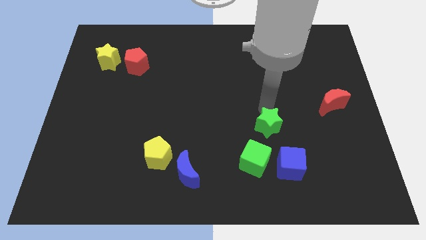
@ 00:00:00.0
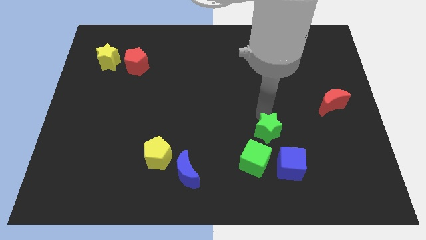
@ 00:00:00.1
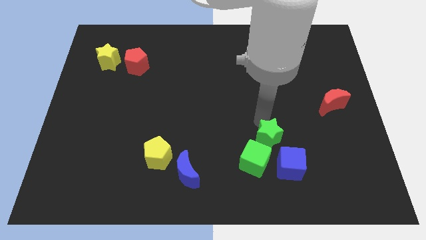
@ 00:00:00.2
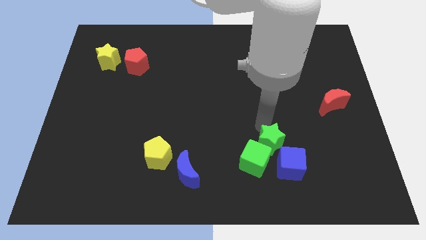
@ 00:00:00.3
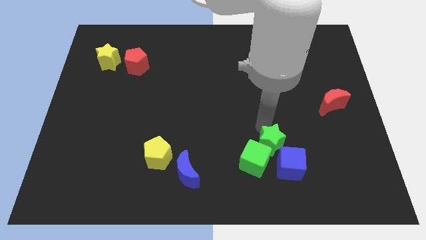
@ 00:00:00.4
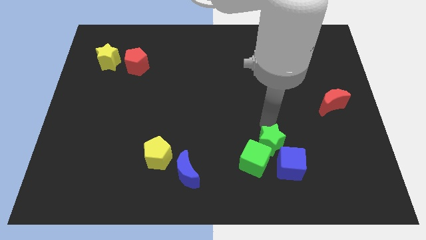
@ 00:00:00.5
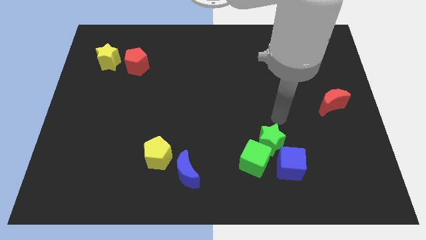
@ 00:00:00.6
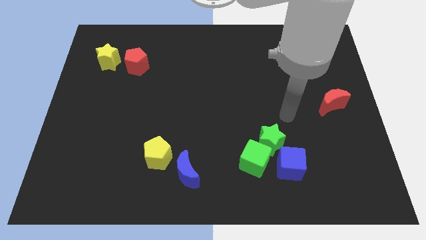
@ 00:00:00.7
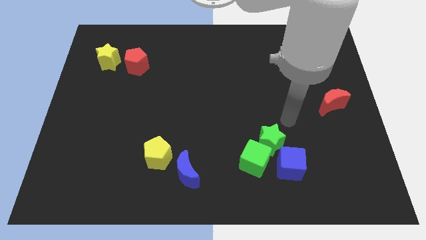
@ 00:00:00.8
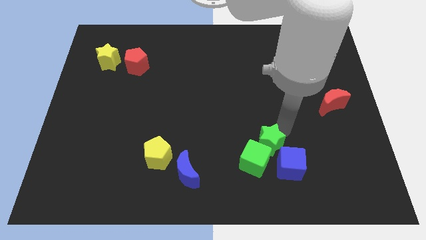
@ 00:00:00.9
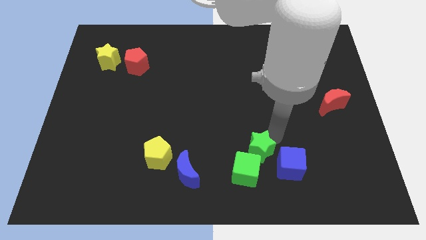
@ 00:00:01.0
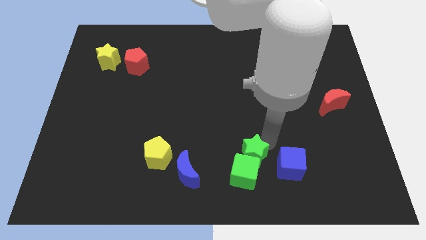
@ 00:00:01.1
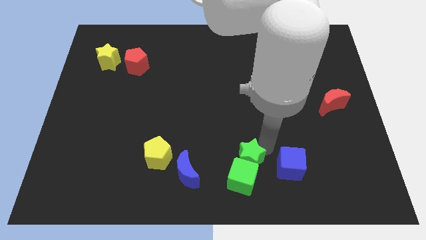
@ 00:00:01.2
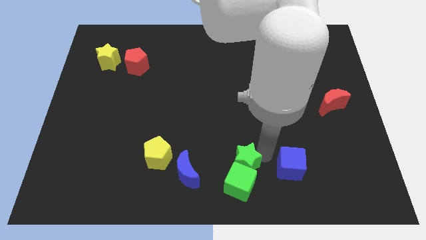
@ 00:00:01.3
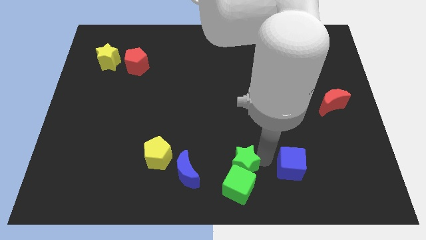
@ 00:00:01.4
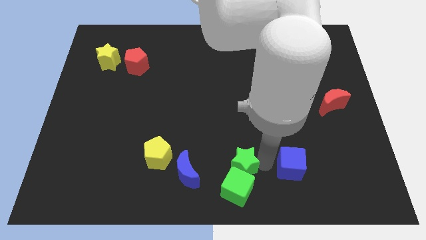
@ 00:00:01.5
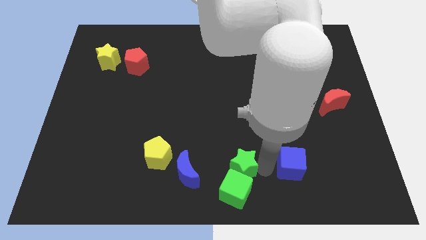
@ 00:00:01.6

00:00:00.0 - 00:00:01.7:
push the green star into the green cube

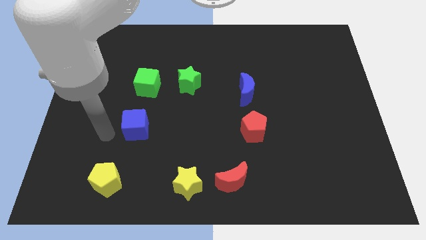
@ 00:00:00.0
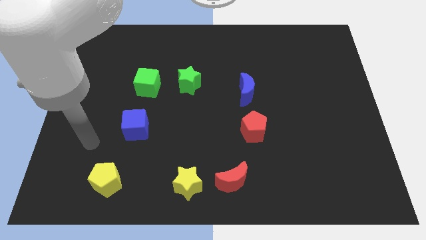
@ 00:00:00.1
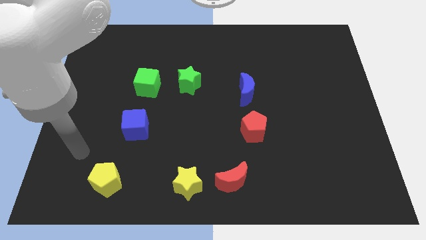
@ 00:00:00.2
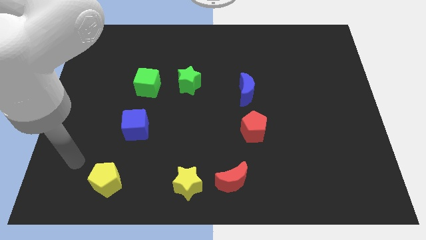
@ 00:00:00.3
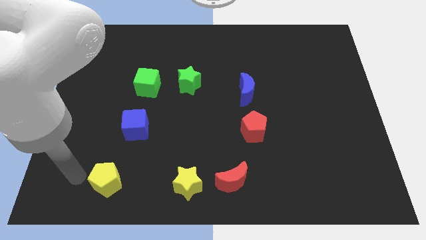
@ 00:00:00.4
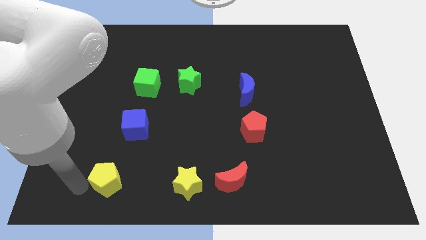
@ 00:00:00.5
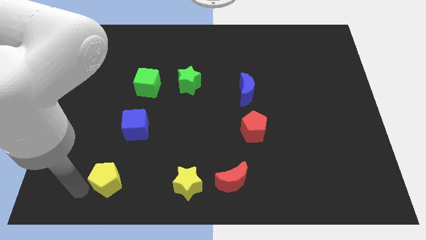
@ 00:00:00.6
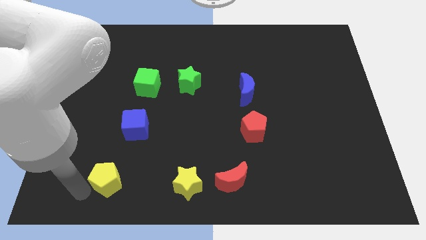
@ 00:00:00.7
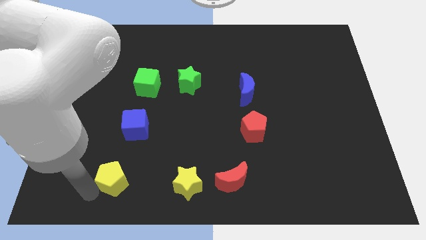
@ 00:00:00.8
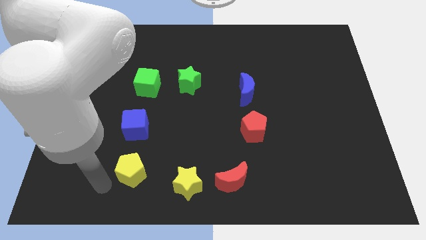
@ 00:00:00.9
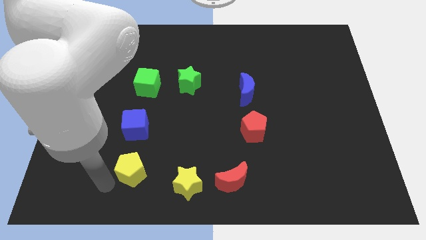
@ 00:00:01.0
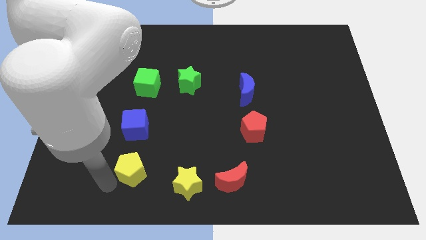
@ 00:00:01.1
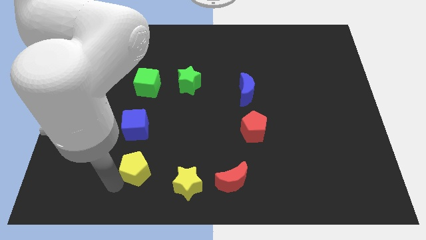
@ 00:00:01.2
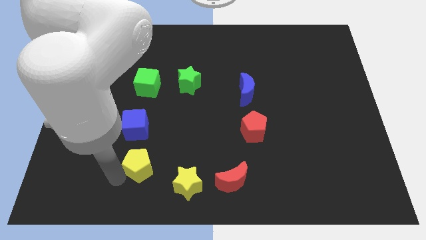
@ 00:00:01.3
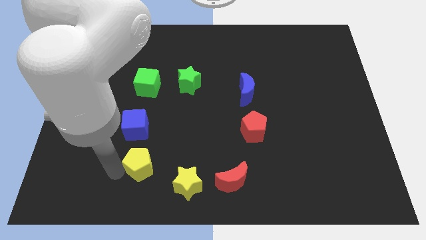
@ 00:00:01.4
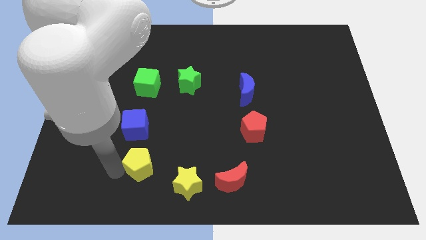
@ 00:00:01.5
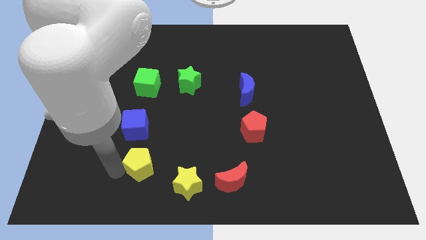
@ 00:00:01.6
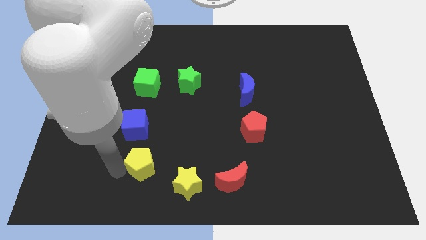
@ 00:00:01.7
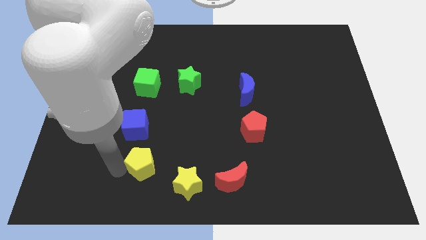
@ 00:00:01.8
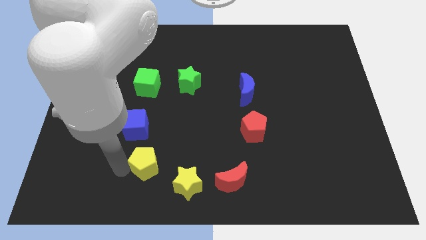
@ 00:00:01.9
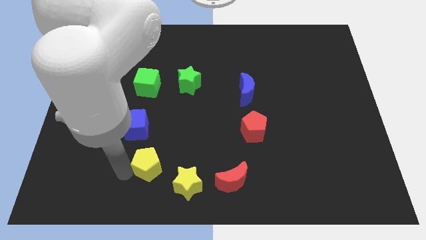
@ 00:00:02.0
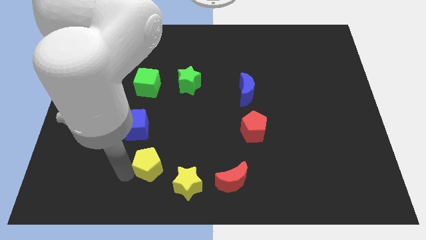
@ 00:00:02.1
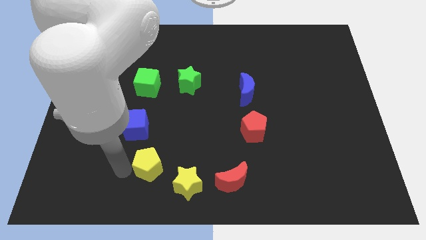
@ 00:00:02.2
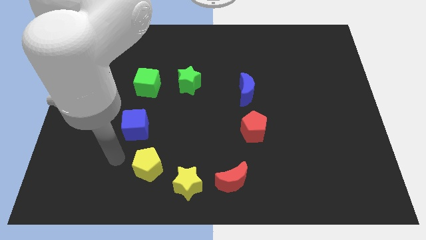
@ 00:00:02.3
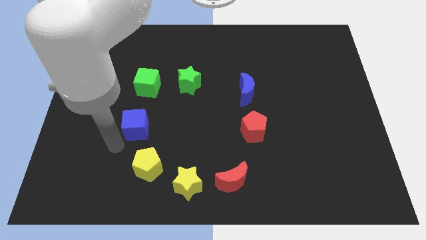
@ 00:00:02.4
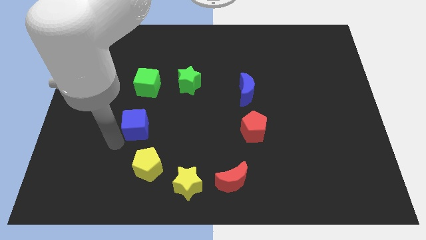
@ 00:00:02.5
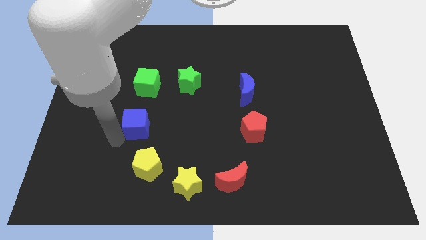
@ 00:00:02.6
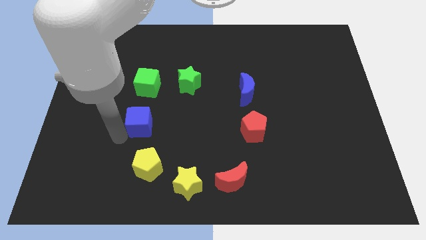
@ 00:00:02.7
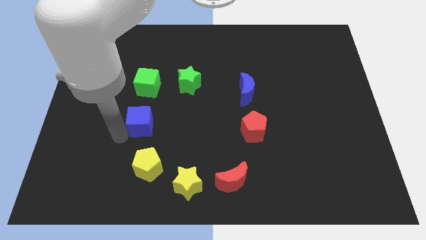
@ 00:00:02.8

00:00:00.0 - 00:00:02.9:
place yellow star to the bottom right of blue cube

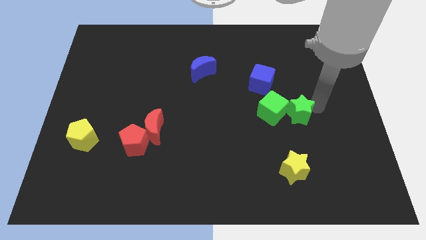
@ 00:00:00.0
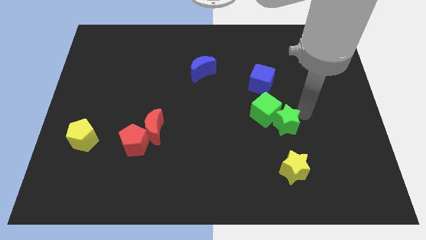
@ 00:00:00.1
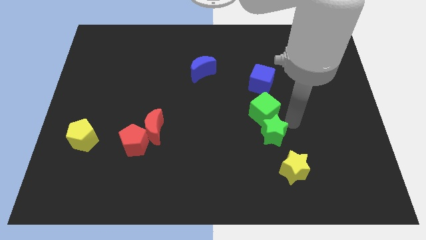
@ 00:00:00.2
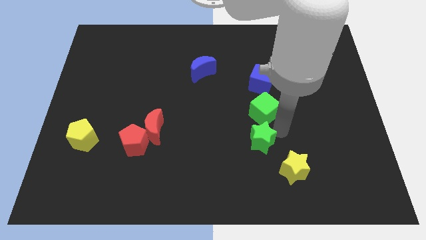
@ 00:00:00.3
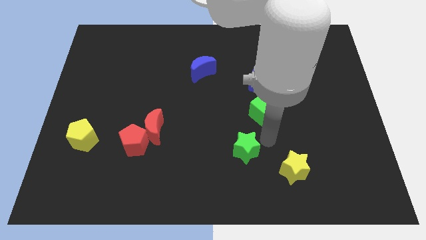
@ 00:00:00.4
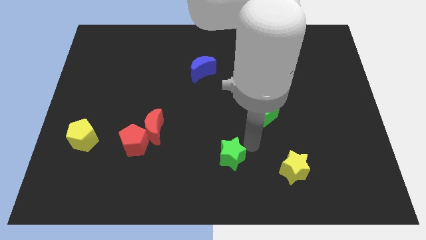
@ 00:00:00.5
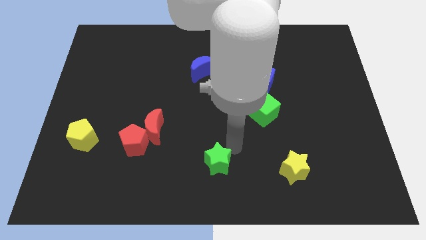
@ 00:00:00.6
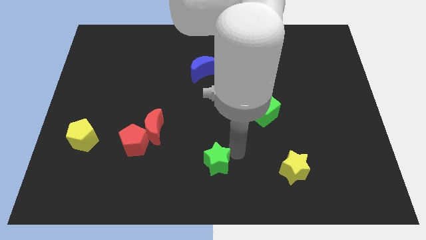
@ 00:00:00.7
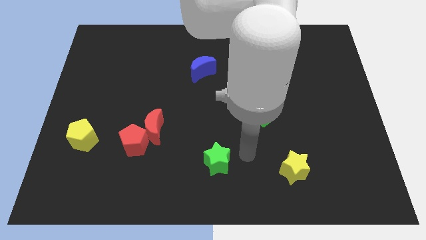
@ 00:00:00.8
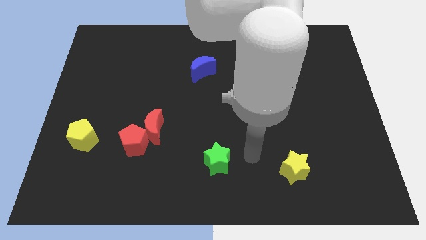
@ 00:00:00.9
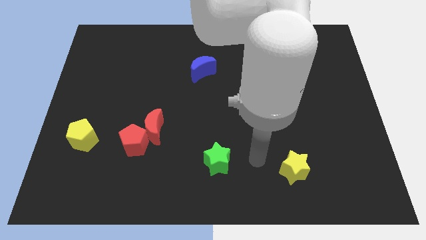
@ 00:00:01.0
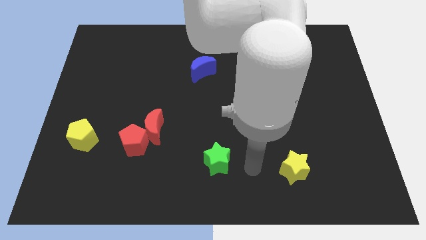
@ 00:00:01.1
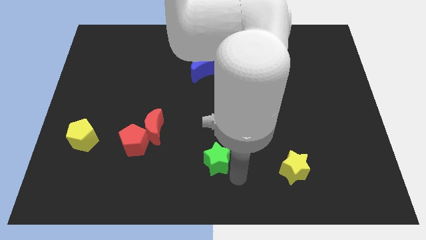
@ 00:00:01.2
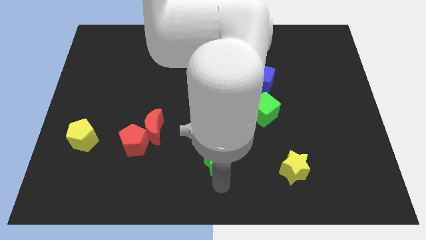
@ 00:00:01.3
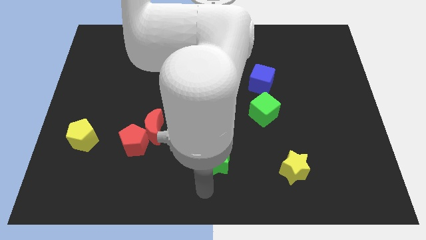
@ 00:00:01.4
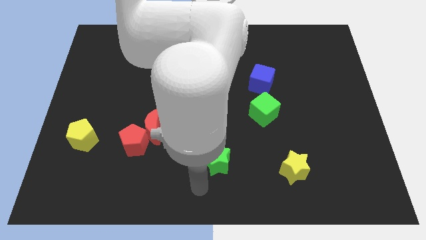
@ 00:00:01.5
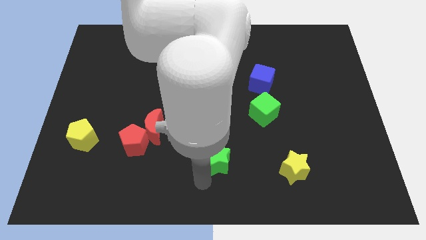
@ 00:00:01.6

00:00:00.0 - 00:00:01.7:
push the green star towards the bottom centre of the board

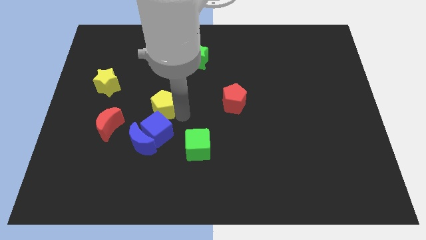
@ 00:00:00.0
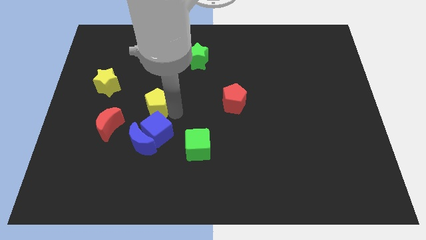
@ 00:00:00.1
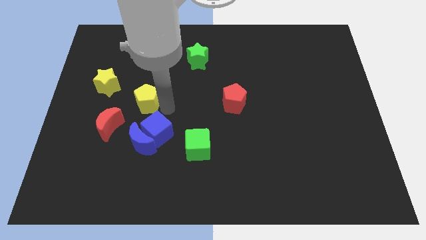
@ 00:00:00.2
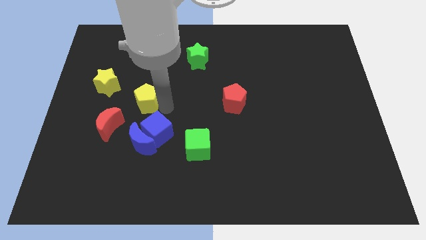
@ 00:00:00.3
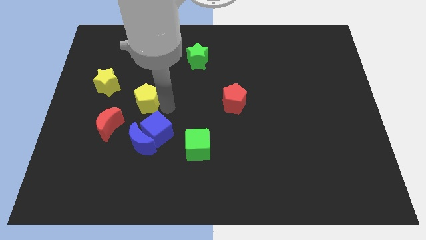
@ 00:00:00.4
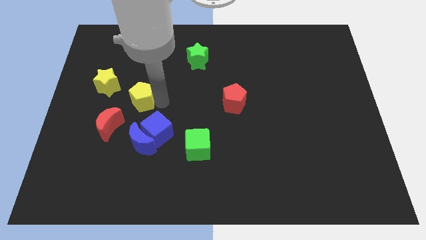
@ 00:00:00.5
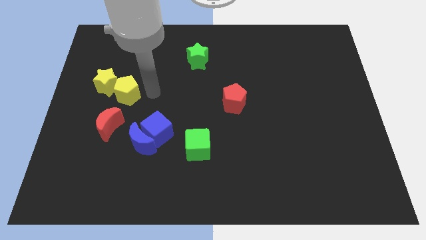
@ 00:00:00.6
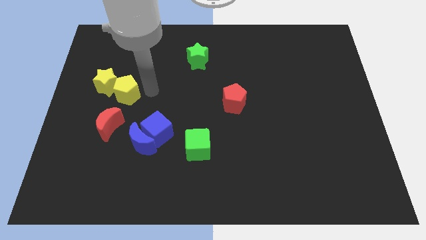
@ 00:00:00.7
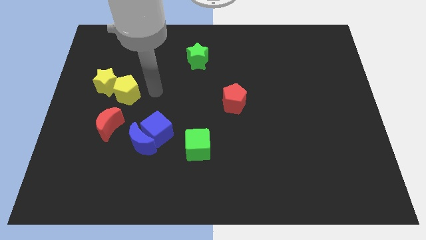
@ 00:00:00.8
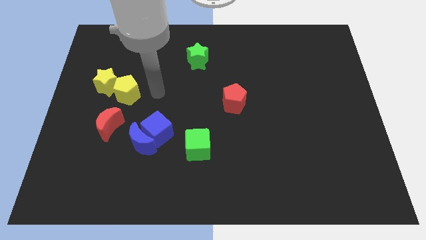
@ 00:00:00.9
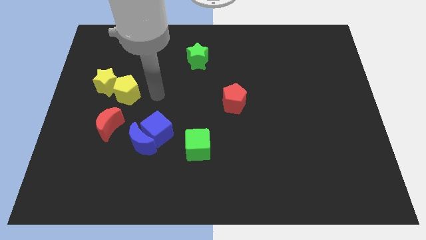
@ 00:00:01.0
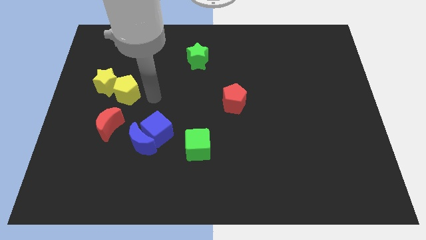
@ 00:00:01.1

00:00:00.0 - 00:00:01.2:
push the yellow pentagon towards the right side of the yellow star

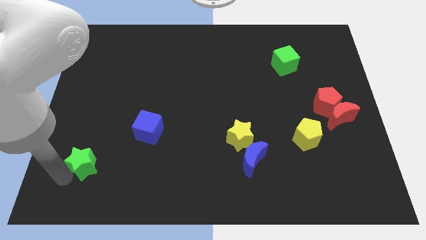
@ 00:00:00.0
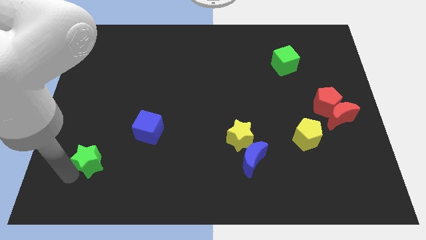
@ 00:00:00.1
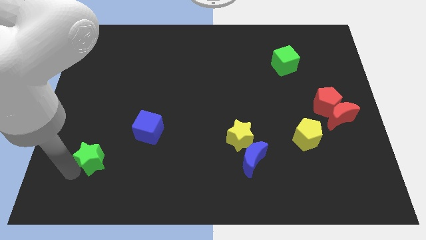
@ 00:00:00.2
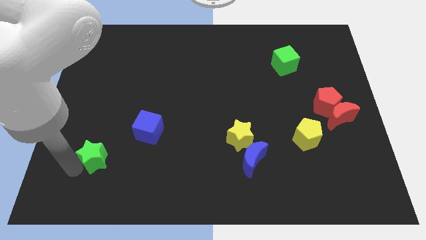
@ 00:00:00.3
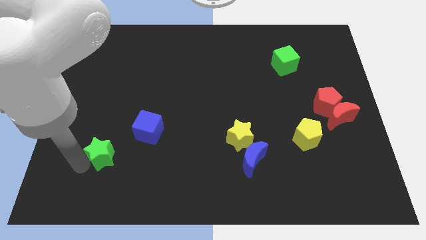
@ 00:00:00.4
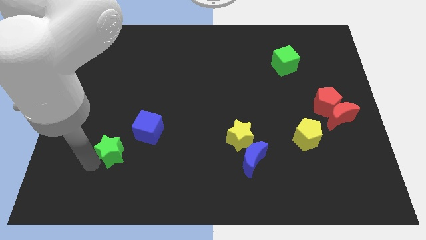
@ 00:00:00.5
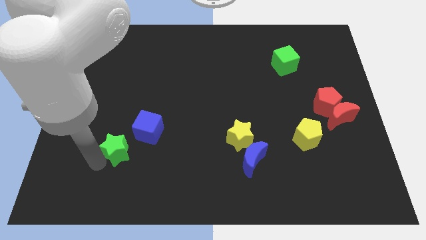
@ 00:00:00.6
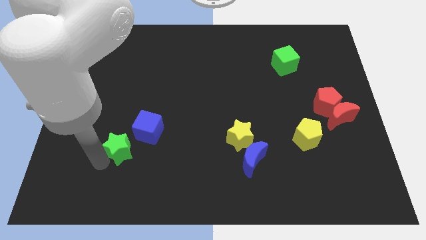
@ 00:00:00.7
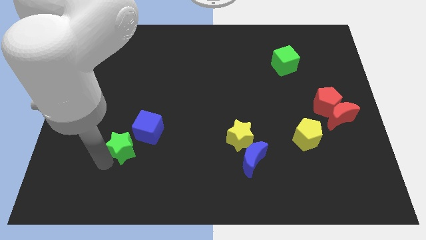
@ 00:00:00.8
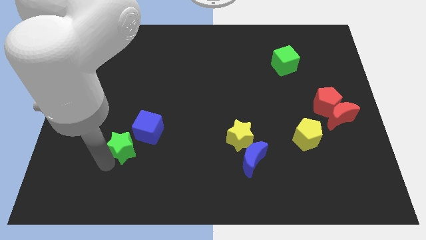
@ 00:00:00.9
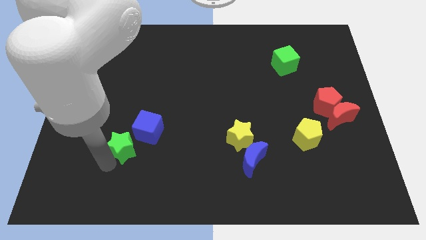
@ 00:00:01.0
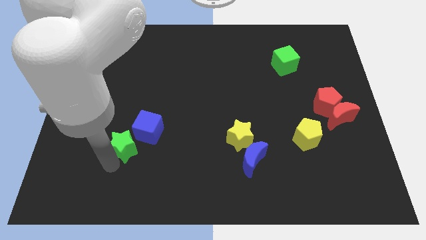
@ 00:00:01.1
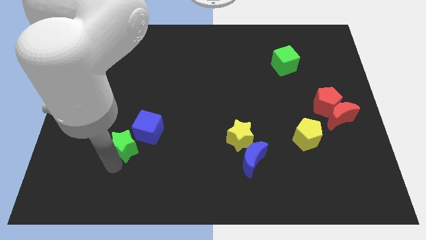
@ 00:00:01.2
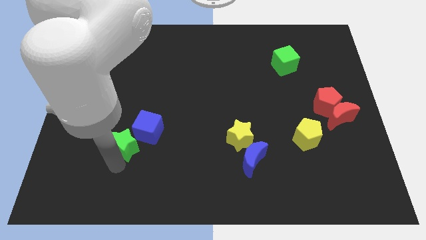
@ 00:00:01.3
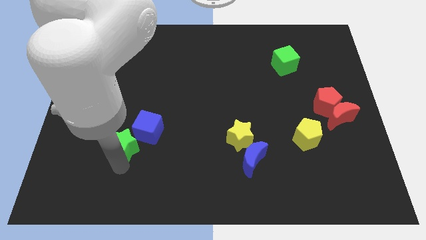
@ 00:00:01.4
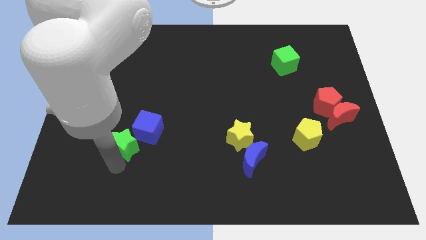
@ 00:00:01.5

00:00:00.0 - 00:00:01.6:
move green star towards blue cube
